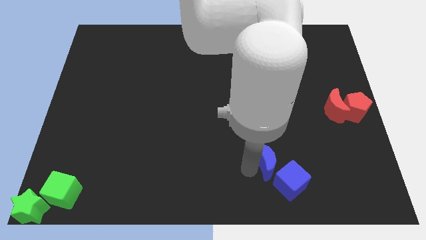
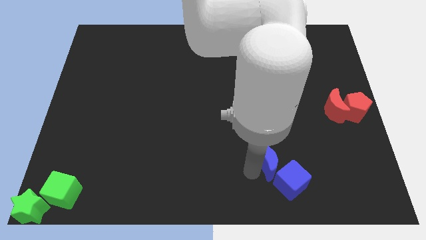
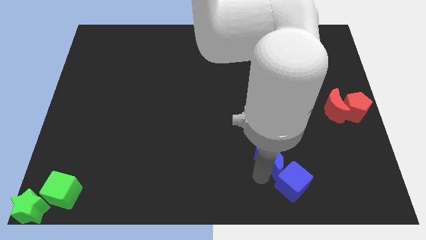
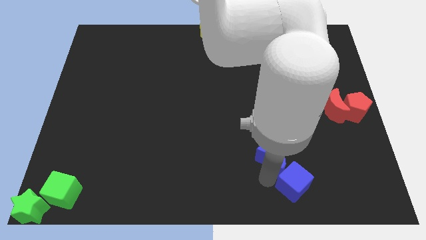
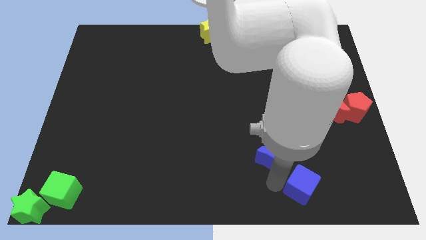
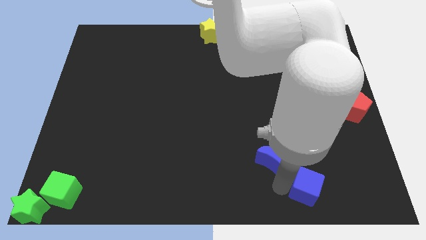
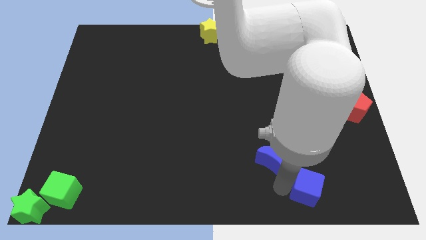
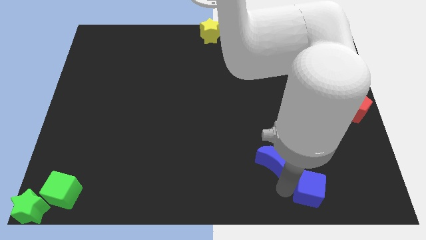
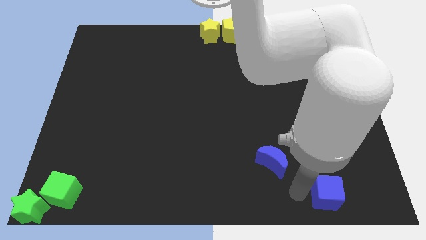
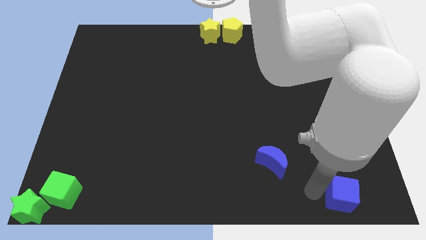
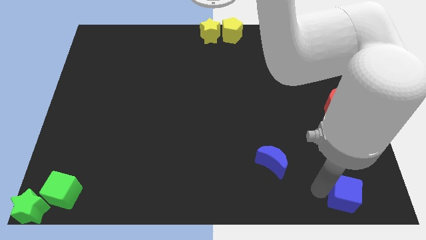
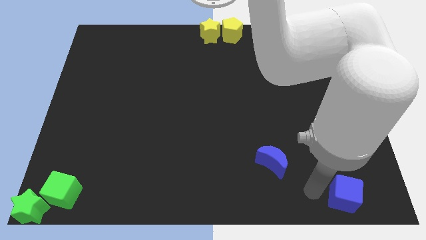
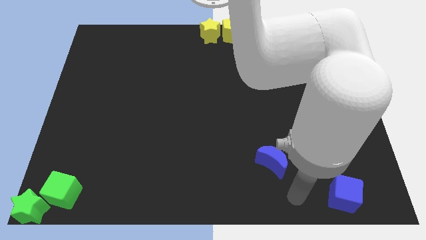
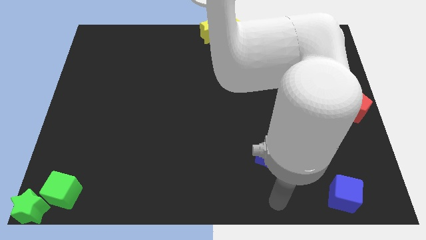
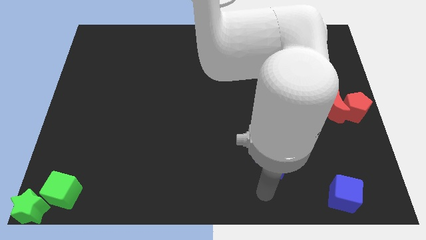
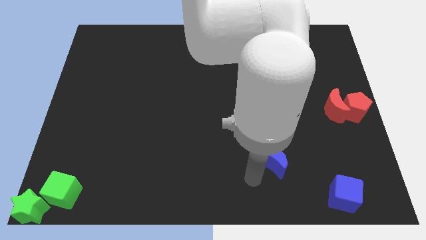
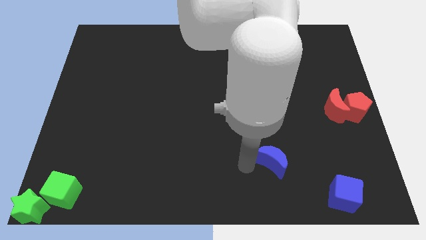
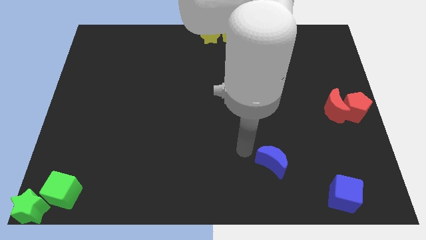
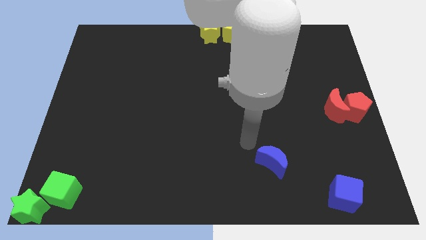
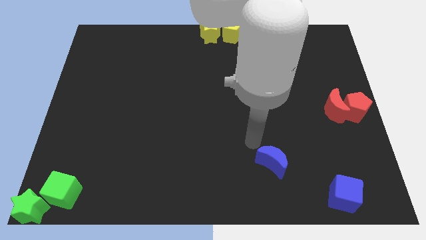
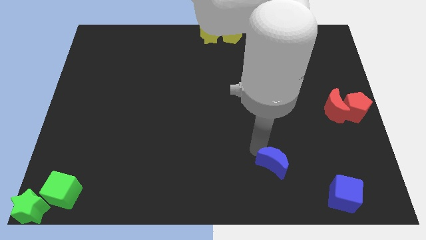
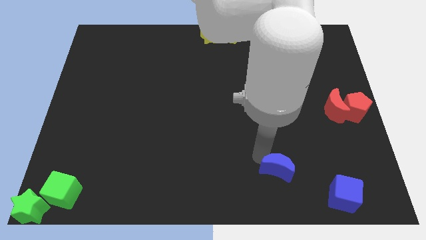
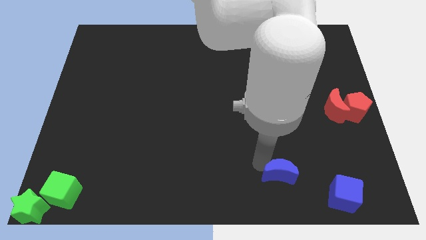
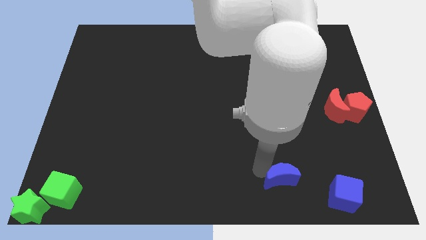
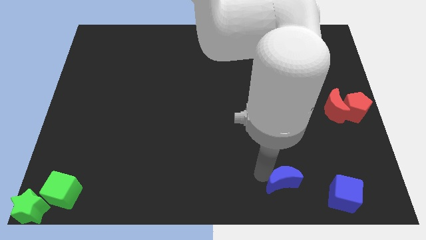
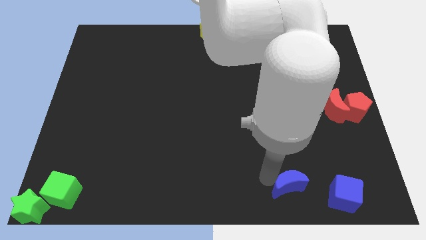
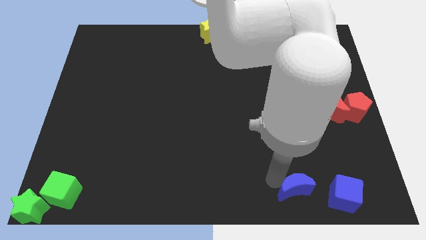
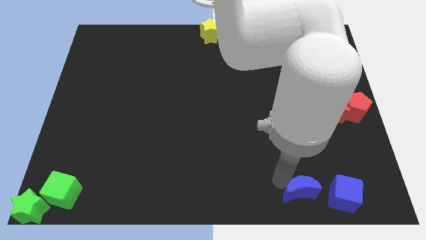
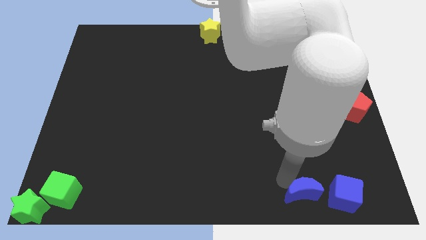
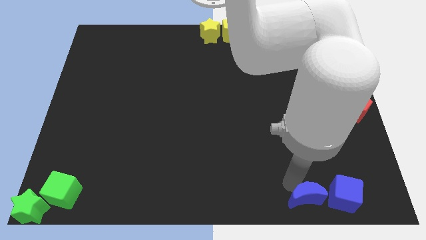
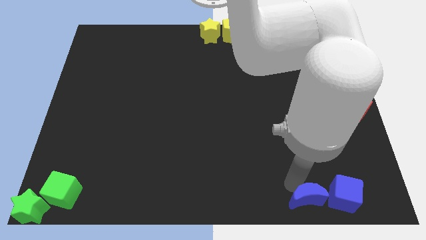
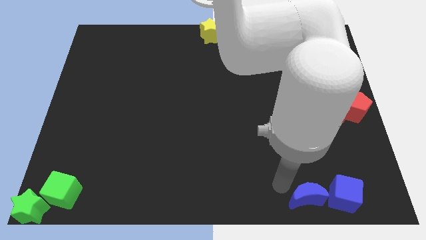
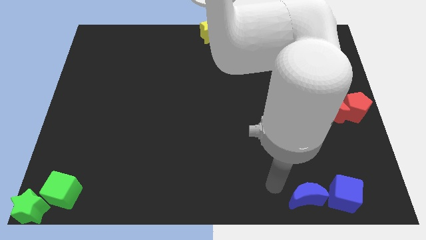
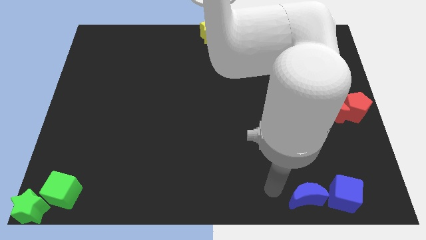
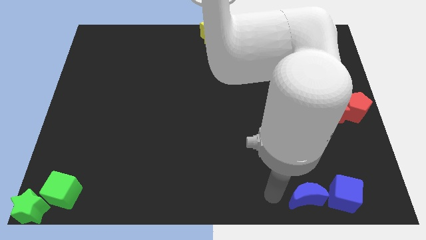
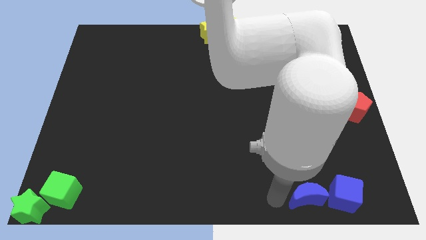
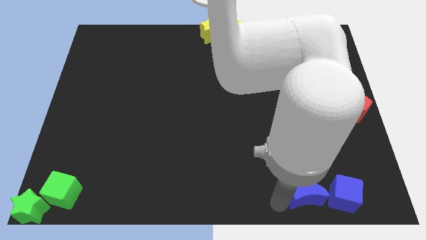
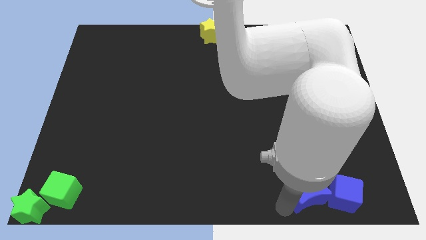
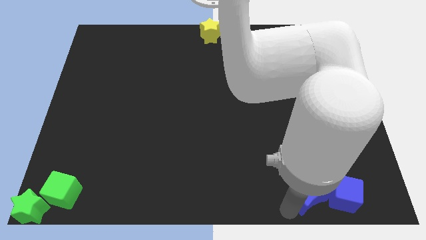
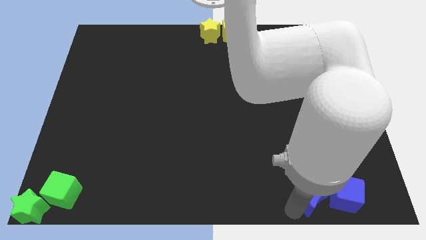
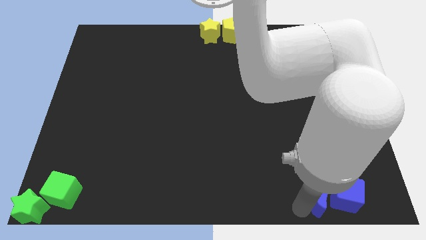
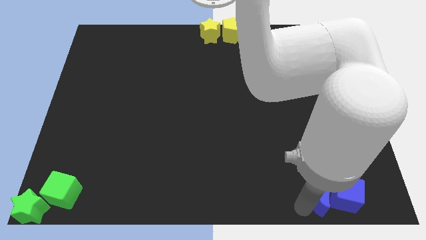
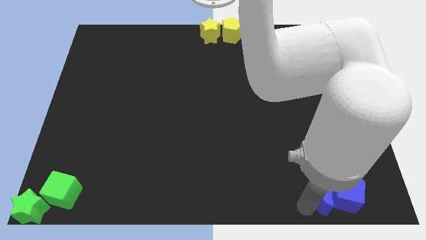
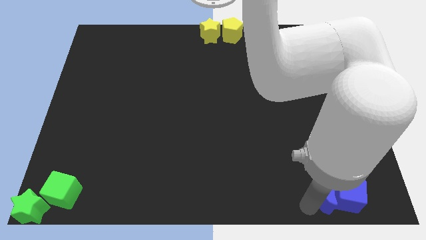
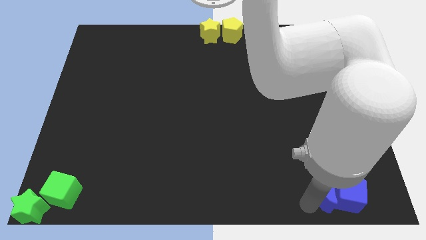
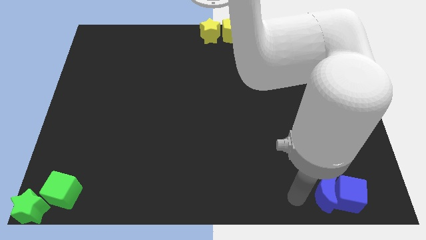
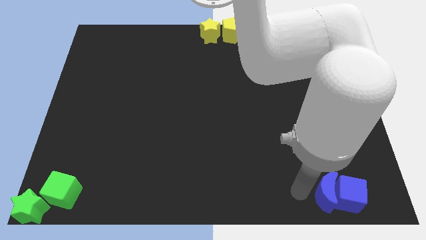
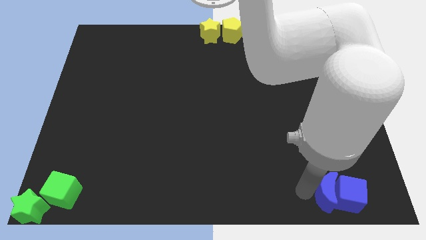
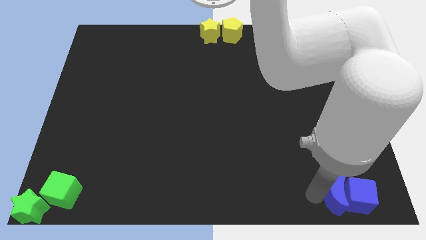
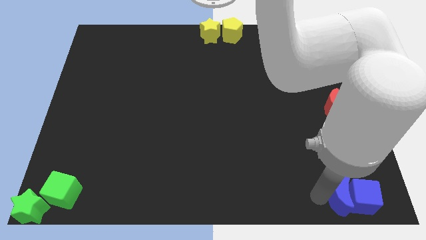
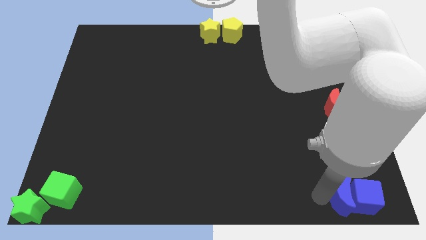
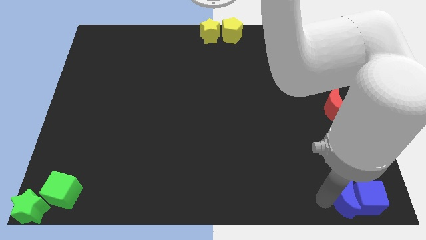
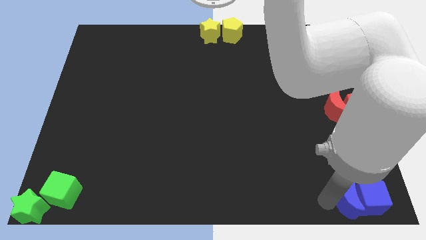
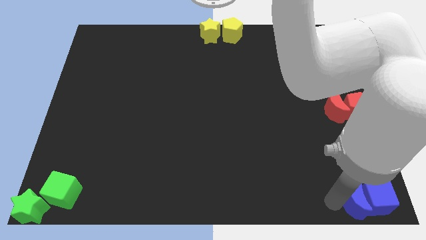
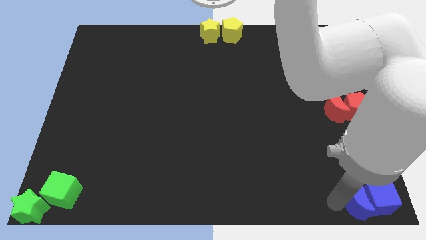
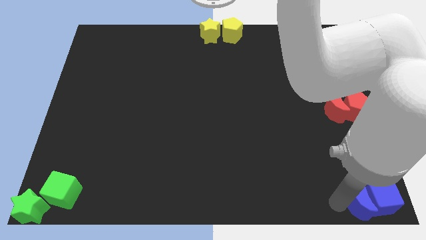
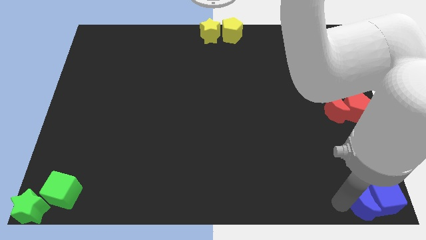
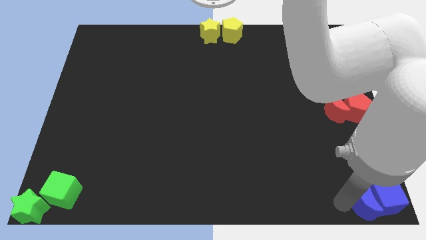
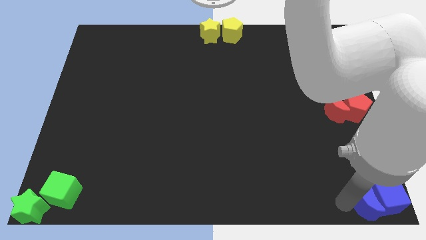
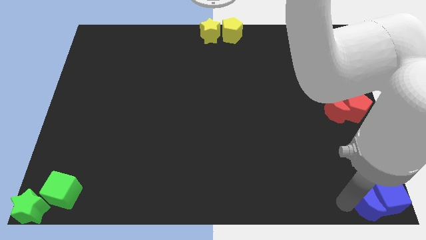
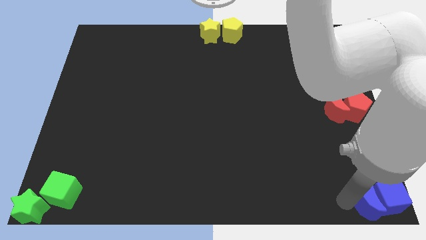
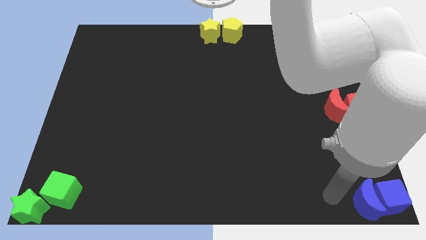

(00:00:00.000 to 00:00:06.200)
push the blue cube along with blue crescent bottom right corner

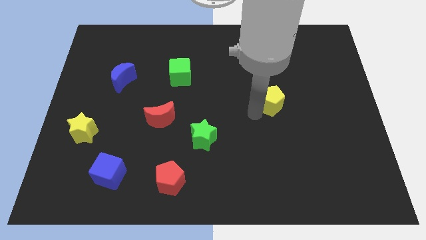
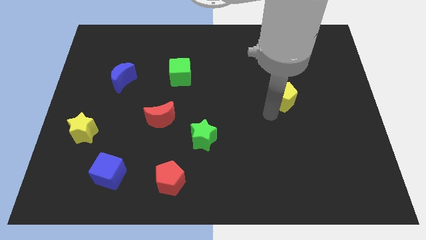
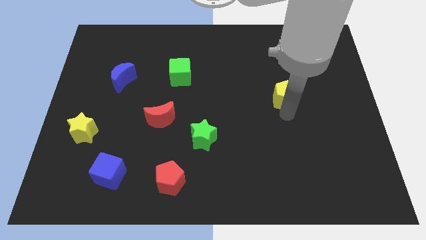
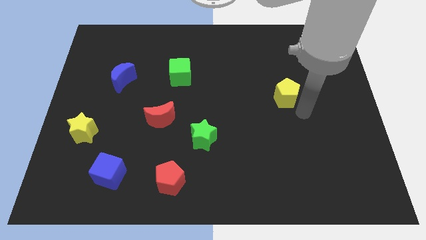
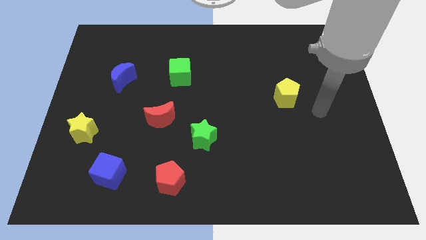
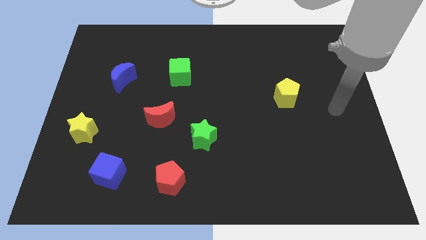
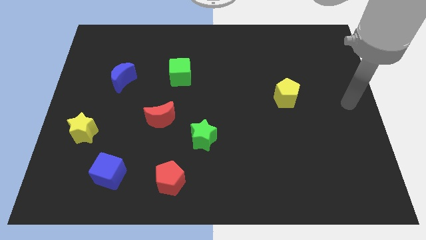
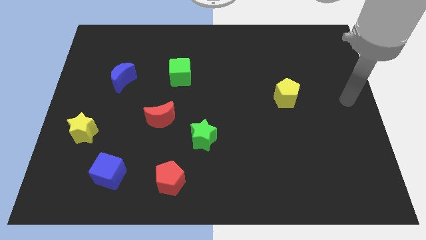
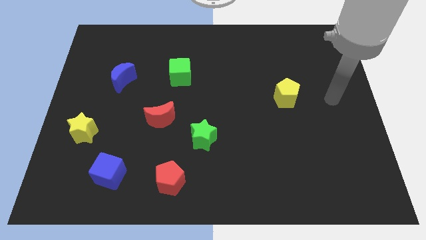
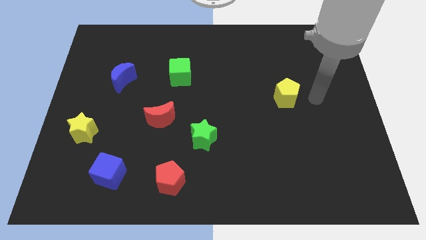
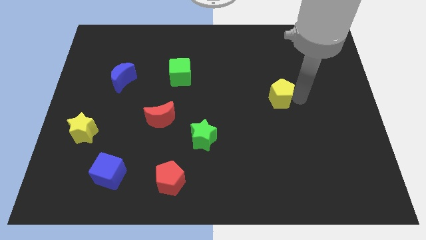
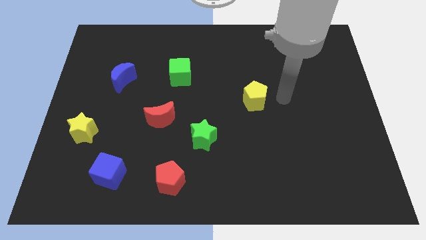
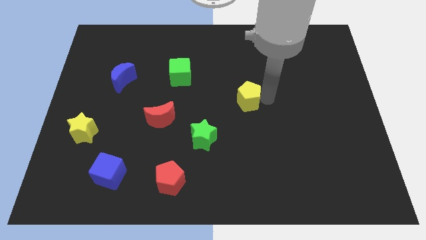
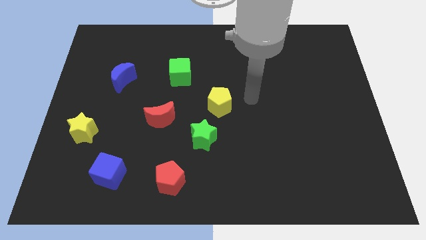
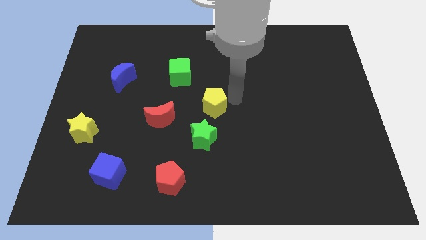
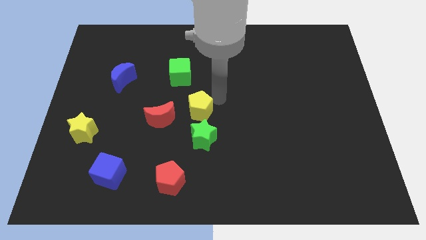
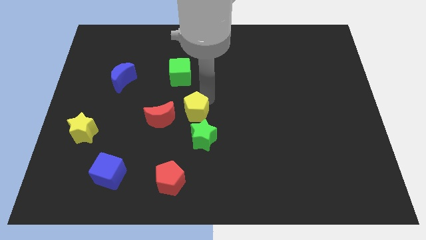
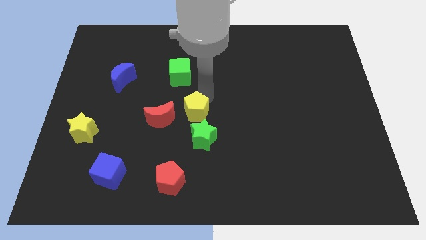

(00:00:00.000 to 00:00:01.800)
push the yellow pentagon to the top left side of the green star

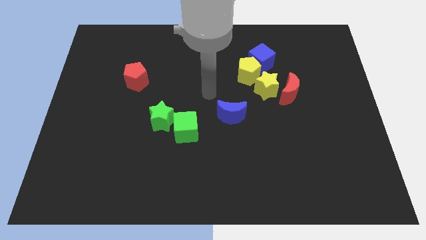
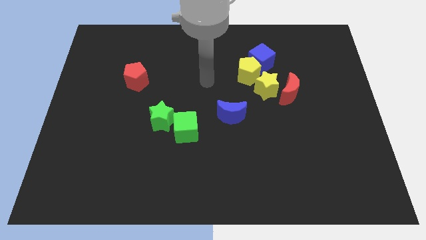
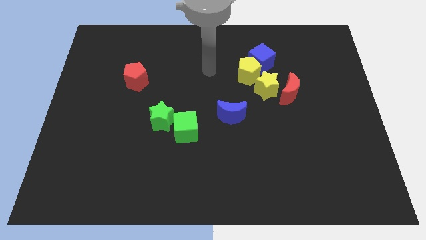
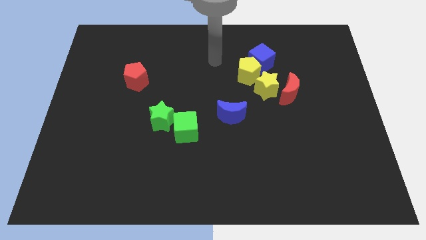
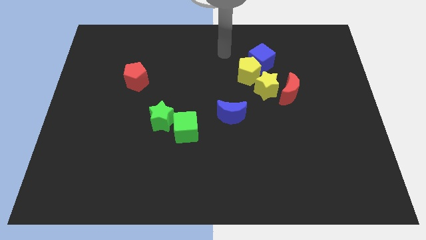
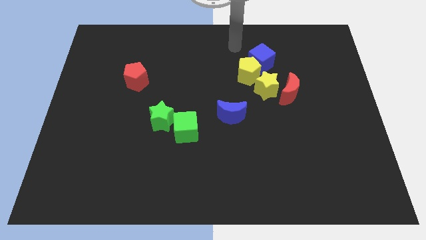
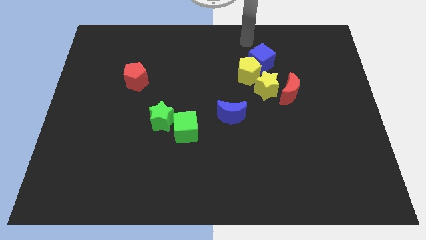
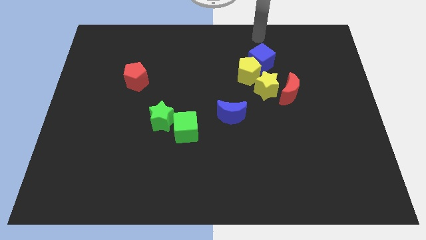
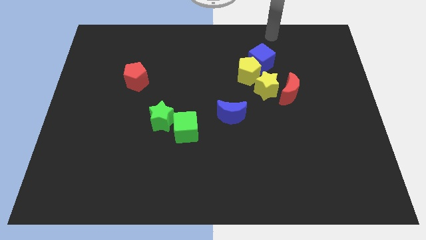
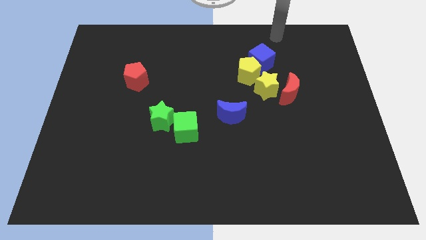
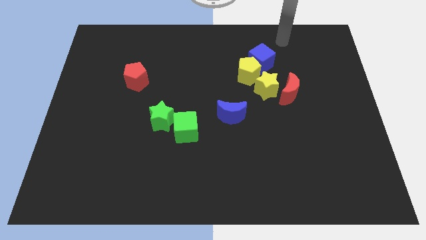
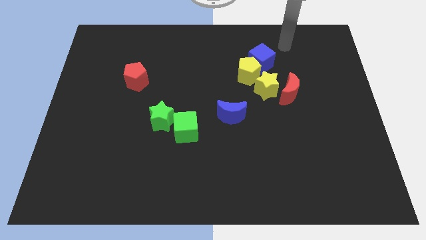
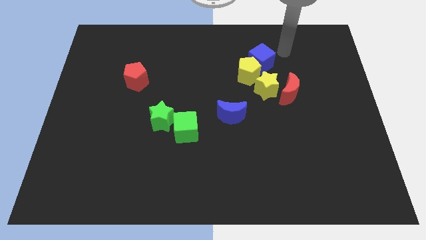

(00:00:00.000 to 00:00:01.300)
move your arm away from the blue moon
